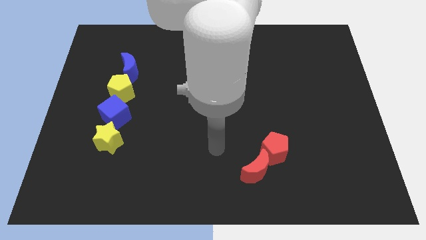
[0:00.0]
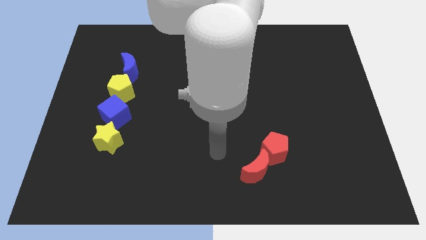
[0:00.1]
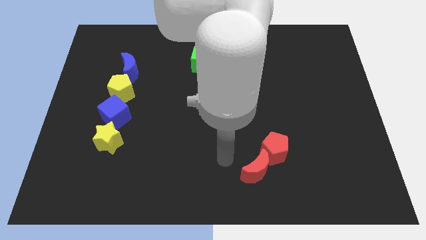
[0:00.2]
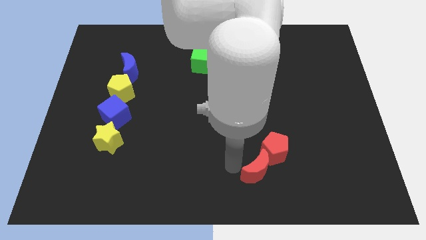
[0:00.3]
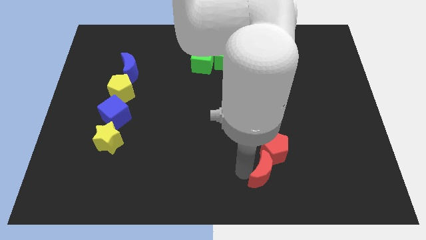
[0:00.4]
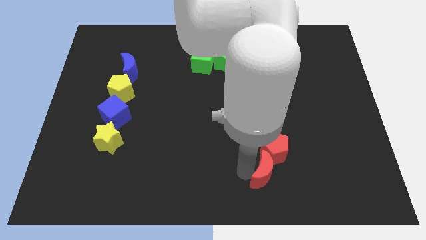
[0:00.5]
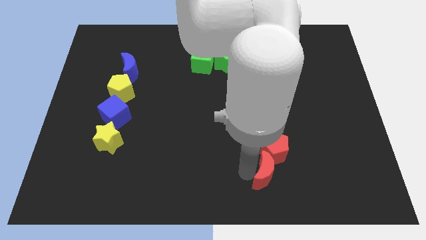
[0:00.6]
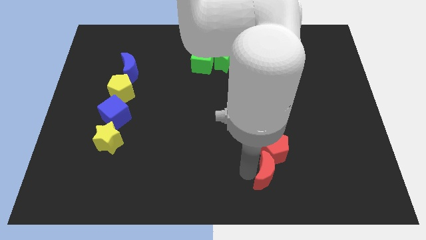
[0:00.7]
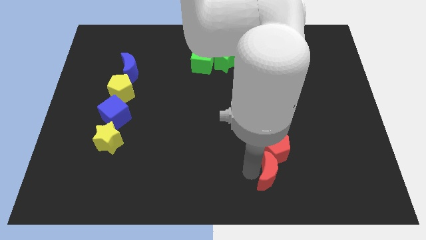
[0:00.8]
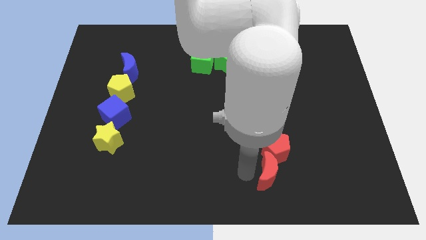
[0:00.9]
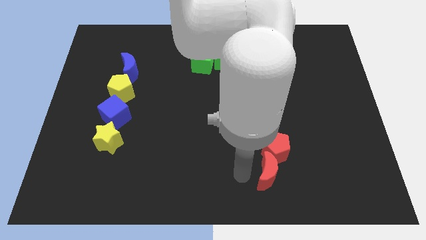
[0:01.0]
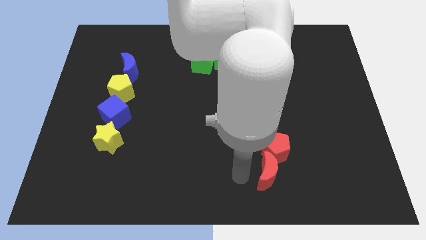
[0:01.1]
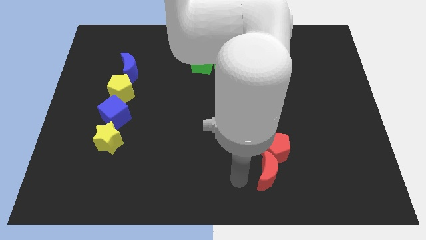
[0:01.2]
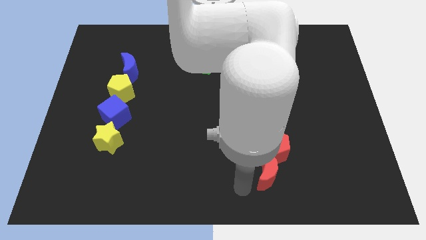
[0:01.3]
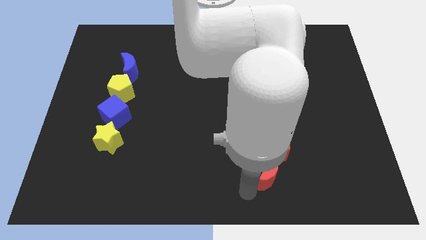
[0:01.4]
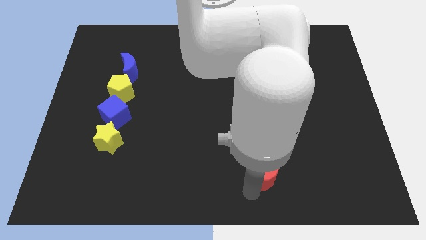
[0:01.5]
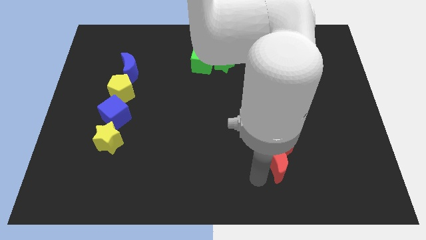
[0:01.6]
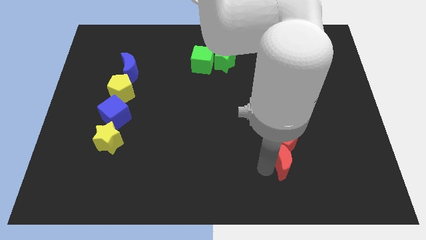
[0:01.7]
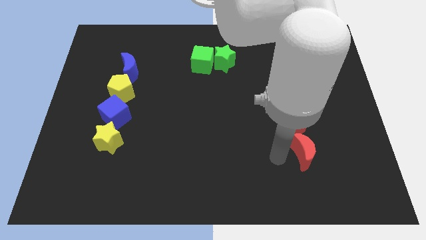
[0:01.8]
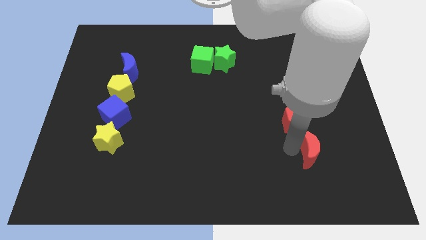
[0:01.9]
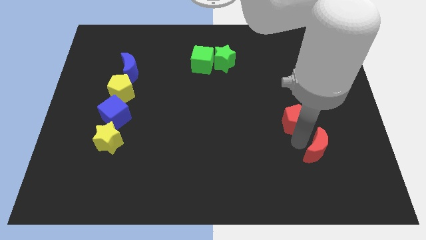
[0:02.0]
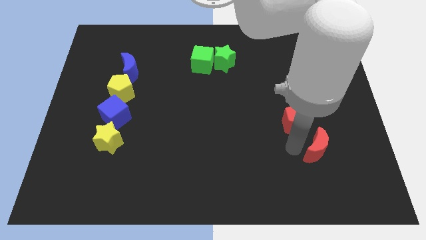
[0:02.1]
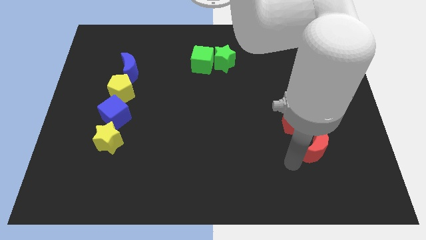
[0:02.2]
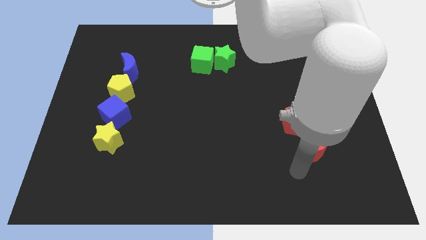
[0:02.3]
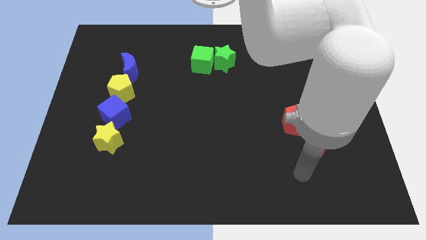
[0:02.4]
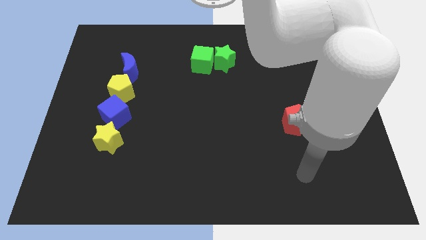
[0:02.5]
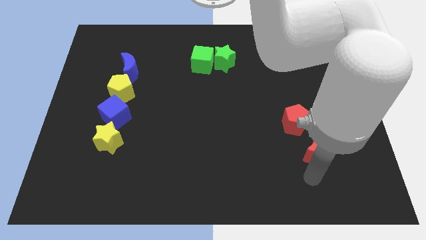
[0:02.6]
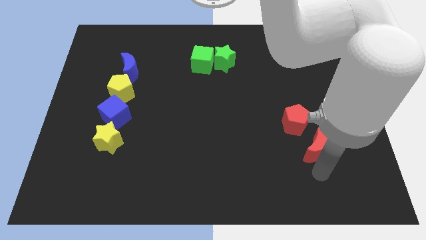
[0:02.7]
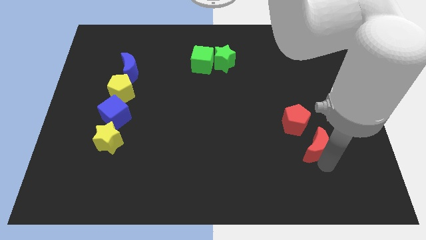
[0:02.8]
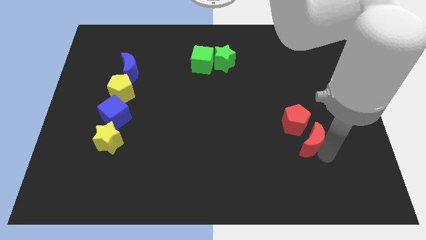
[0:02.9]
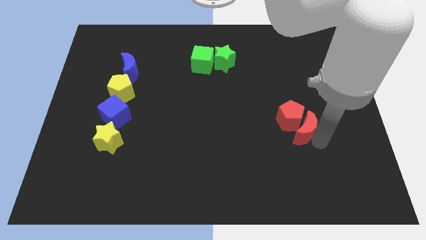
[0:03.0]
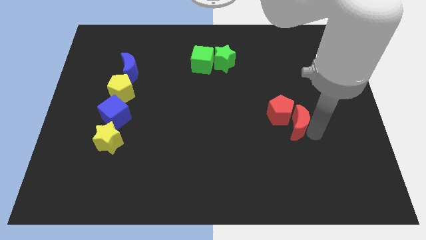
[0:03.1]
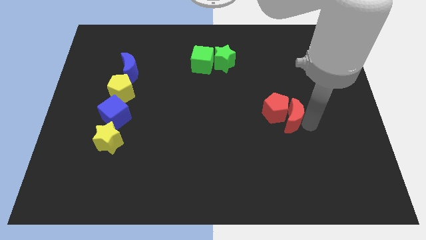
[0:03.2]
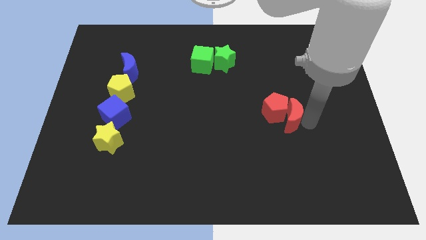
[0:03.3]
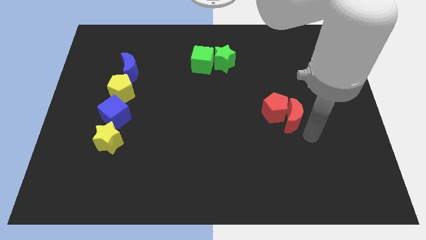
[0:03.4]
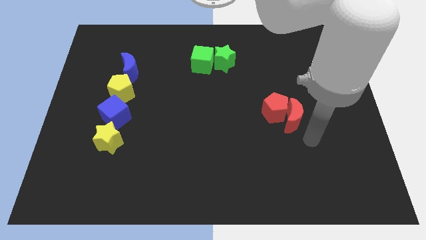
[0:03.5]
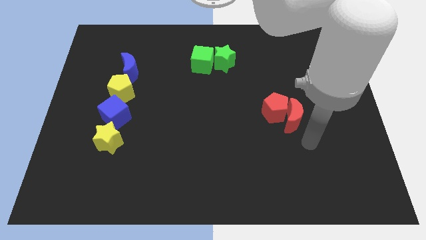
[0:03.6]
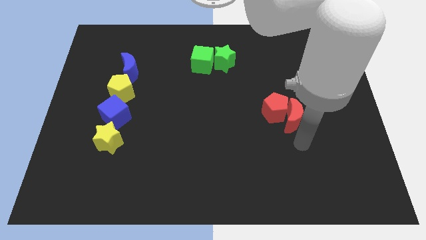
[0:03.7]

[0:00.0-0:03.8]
move the red blocks diagonally to green blocks

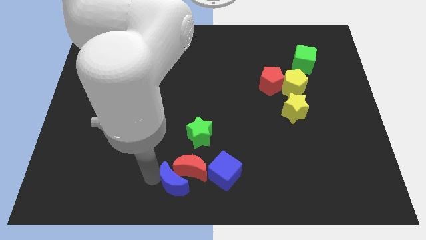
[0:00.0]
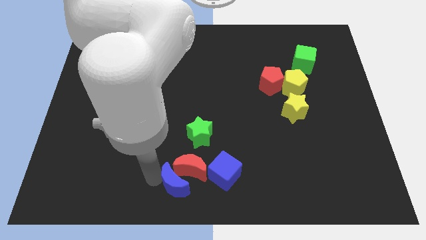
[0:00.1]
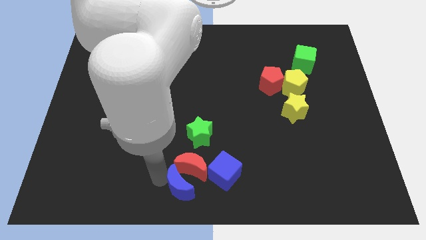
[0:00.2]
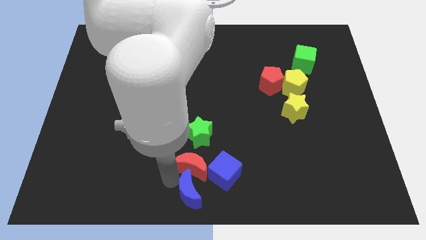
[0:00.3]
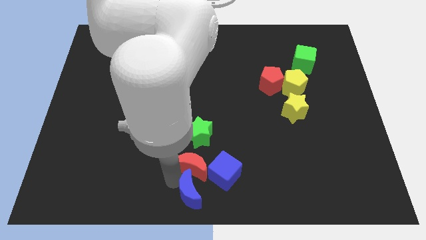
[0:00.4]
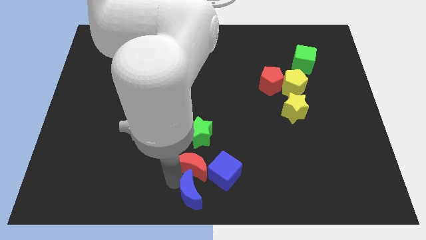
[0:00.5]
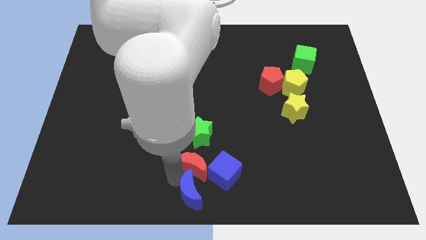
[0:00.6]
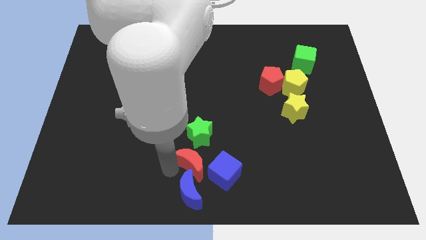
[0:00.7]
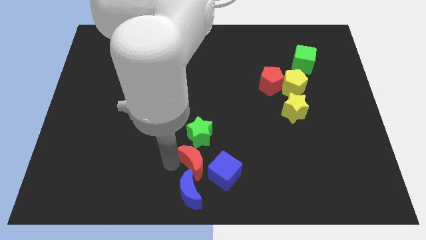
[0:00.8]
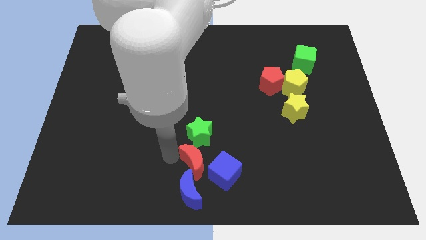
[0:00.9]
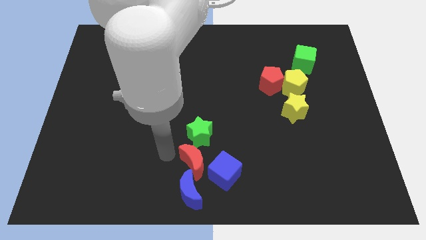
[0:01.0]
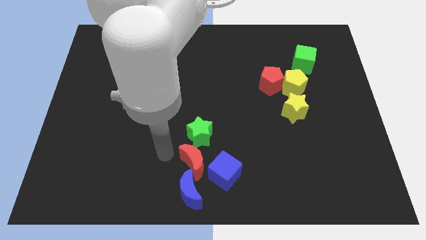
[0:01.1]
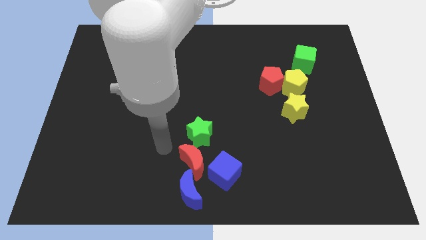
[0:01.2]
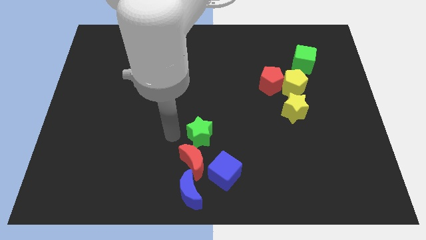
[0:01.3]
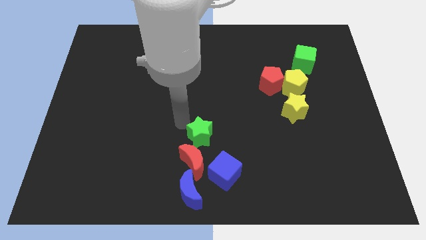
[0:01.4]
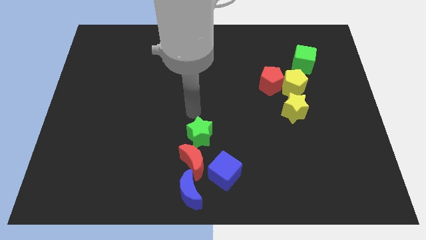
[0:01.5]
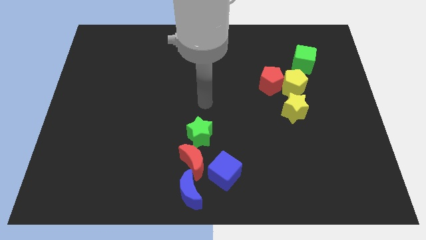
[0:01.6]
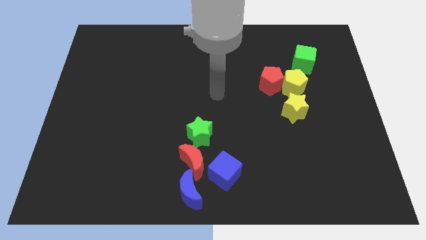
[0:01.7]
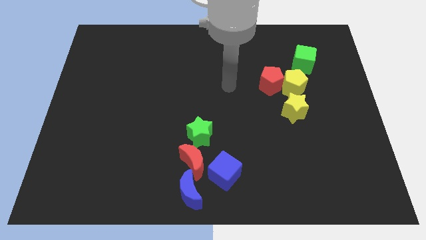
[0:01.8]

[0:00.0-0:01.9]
move the blue crescent towards the bottom center

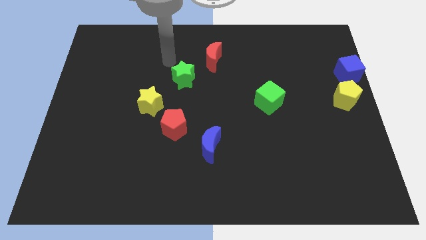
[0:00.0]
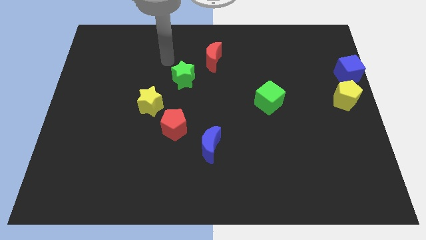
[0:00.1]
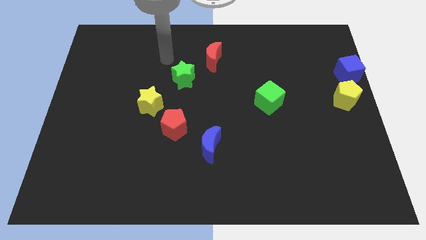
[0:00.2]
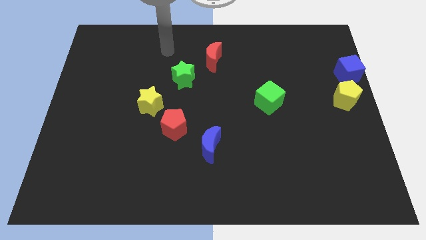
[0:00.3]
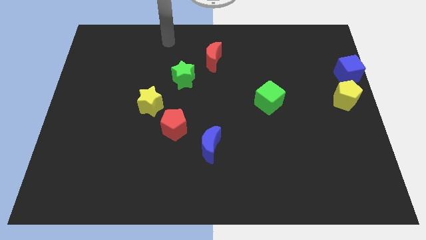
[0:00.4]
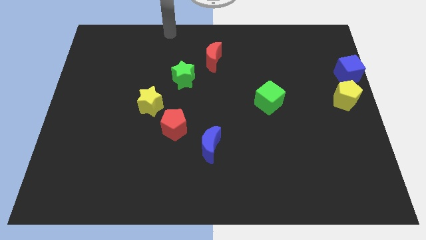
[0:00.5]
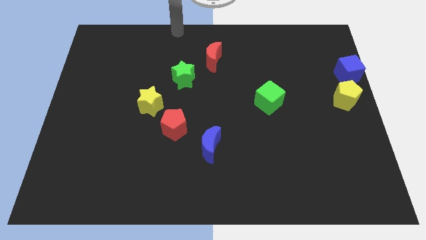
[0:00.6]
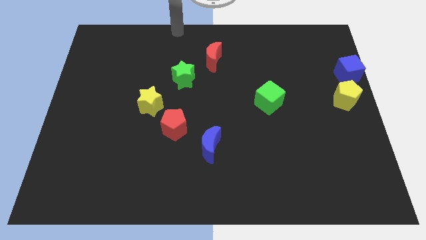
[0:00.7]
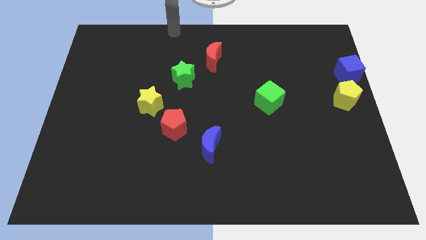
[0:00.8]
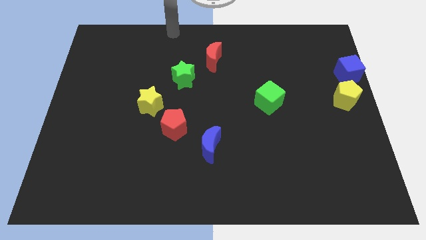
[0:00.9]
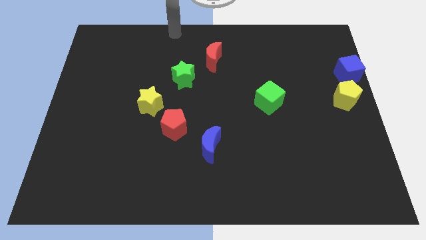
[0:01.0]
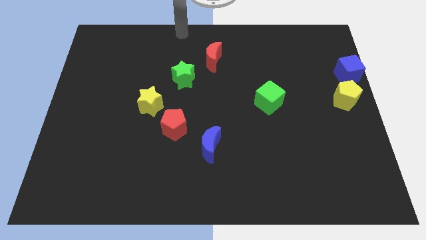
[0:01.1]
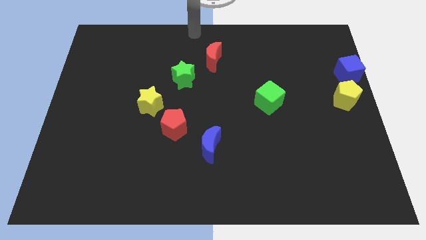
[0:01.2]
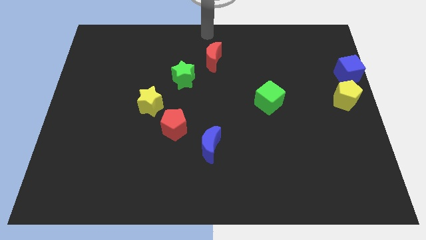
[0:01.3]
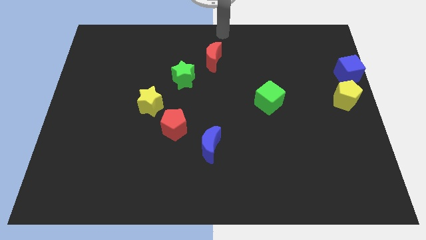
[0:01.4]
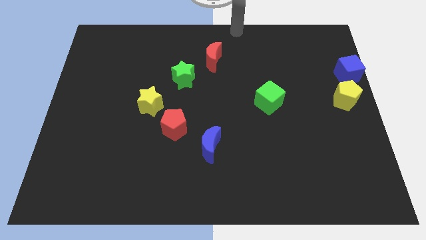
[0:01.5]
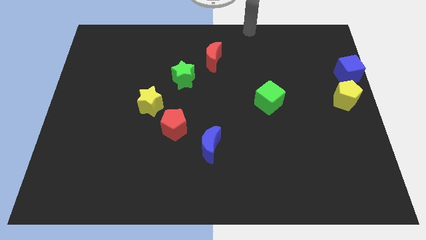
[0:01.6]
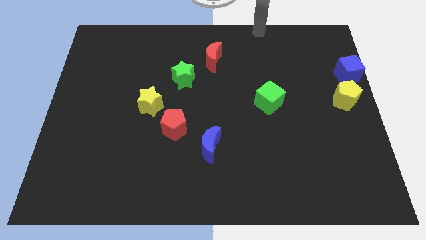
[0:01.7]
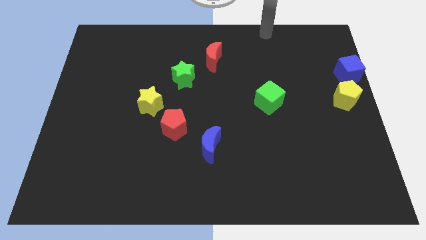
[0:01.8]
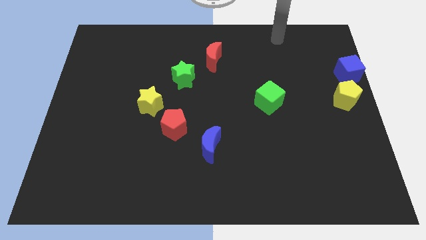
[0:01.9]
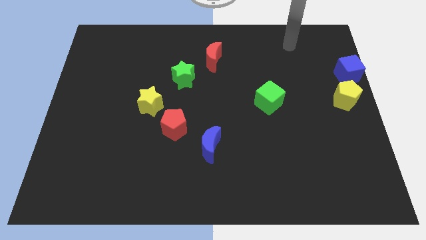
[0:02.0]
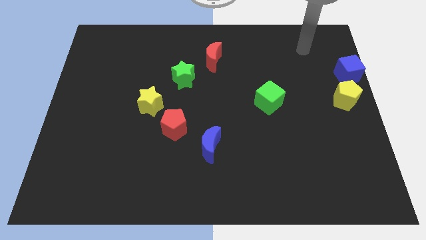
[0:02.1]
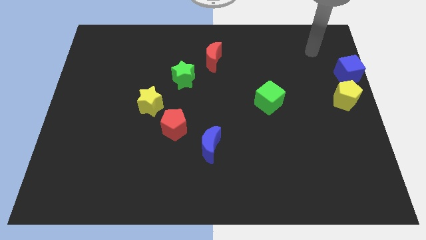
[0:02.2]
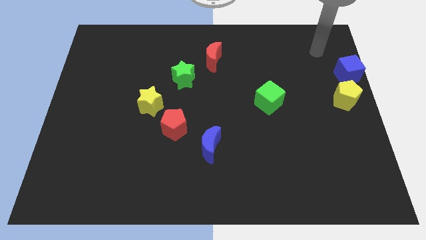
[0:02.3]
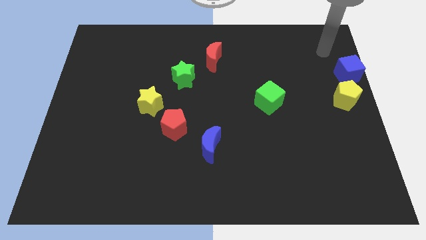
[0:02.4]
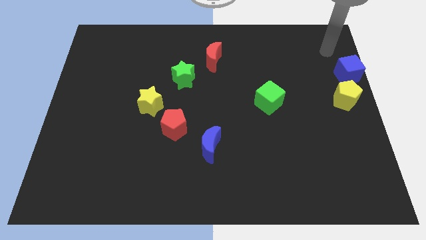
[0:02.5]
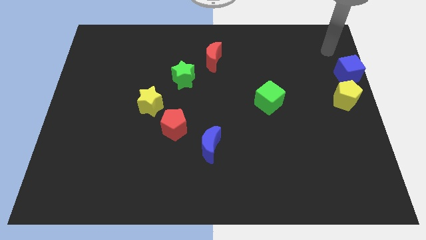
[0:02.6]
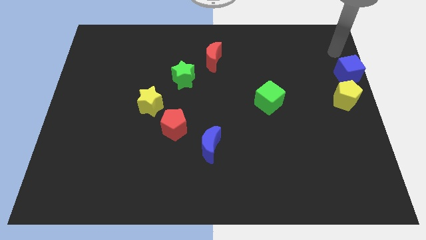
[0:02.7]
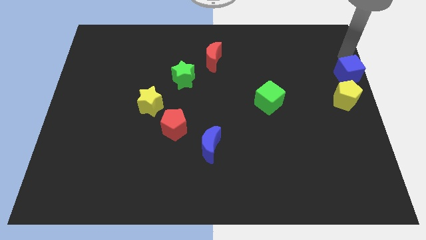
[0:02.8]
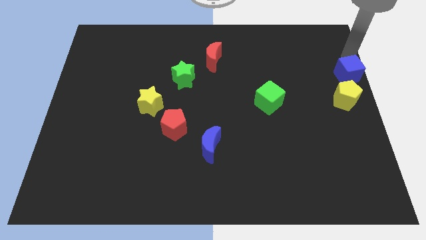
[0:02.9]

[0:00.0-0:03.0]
point your arm at the top of the blue cube

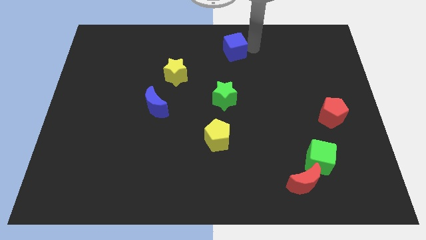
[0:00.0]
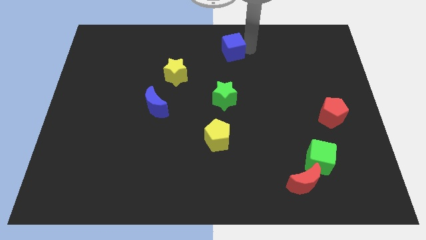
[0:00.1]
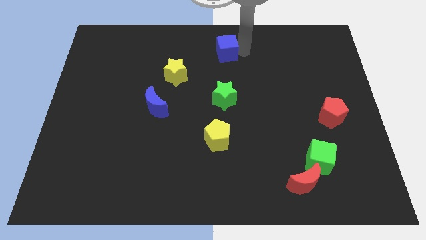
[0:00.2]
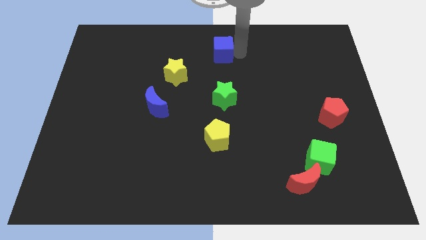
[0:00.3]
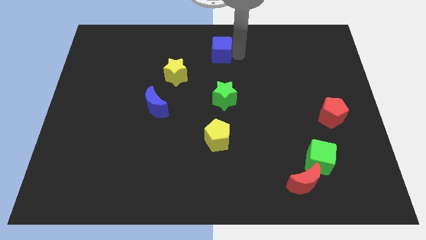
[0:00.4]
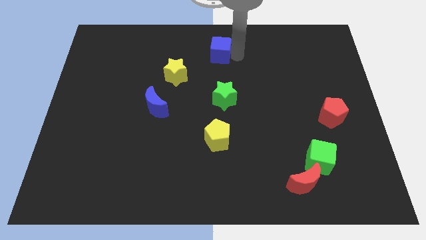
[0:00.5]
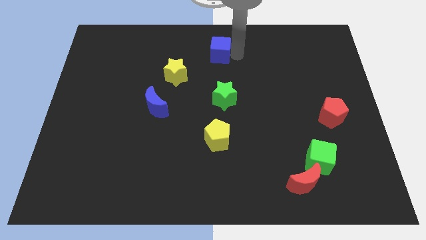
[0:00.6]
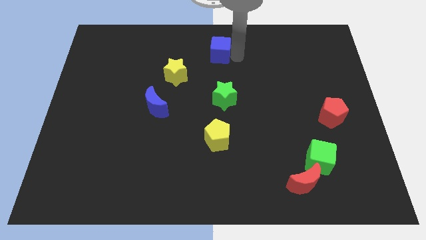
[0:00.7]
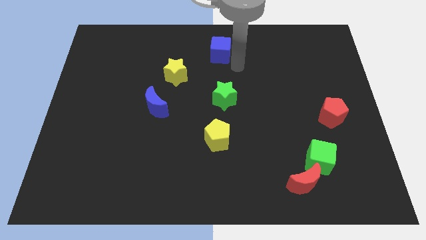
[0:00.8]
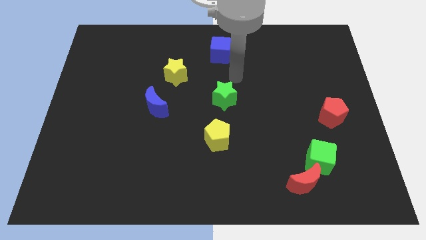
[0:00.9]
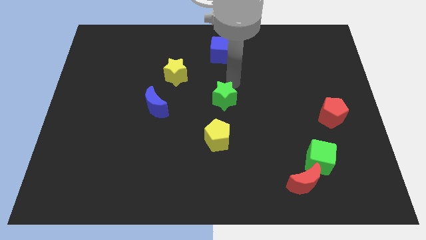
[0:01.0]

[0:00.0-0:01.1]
push blue cube to the top of green star
